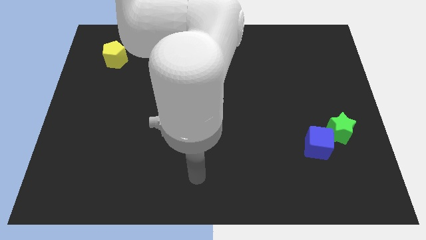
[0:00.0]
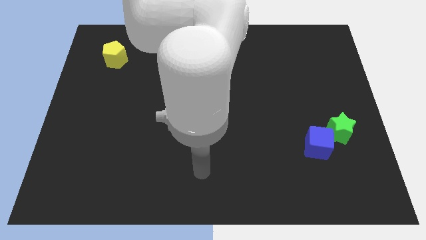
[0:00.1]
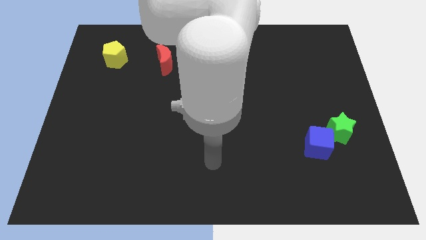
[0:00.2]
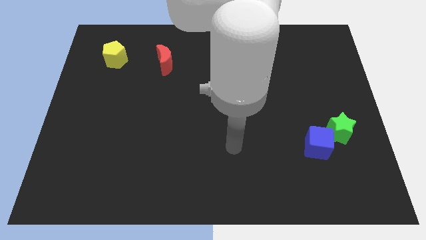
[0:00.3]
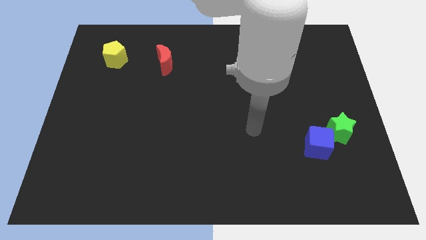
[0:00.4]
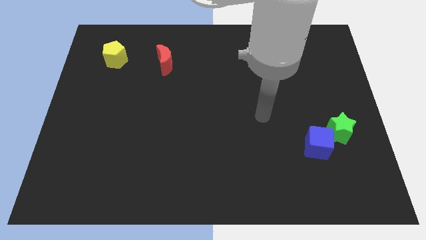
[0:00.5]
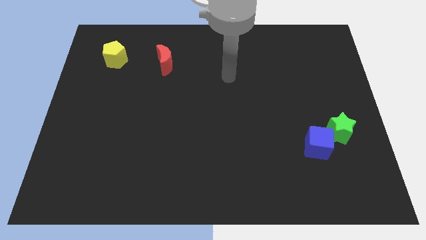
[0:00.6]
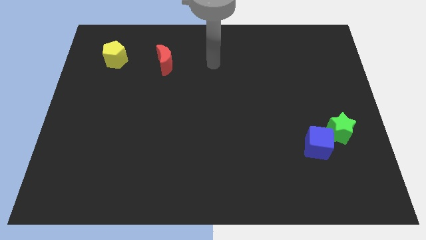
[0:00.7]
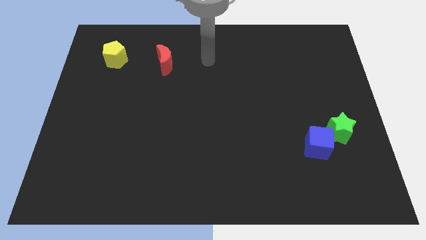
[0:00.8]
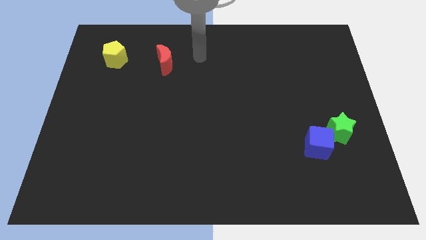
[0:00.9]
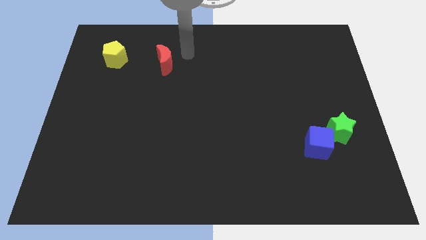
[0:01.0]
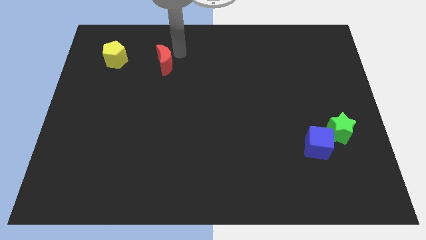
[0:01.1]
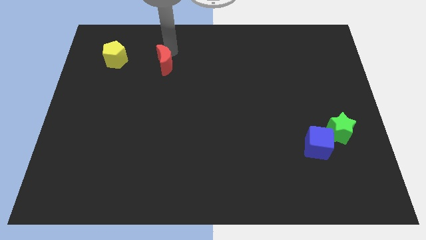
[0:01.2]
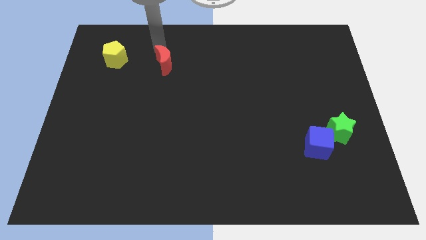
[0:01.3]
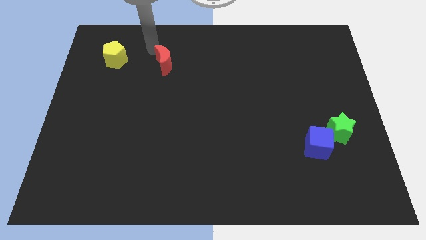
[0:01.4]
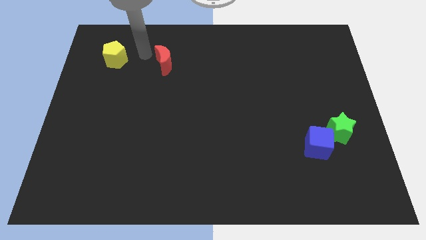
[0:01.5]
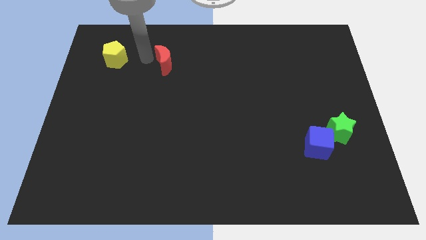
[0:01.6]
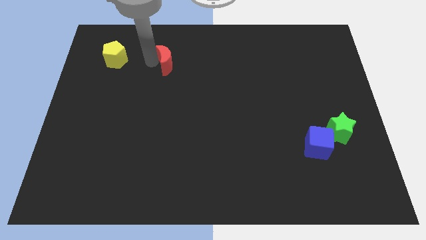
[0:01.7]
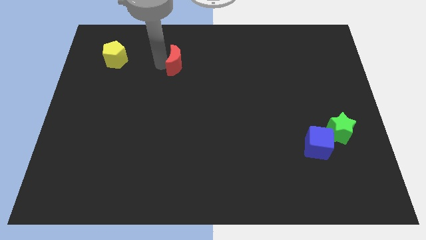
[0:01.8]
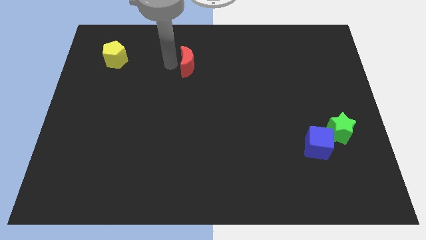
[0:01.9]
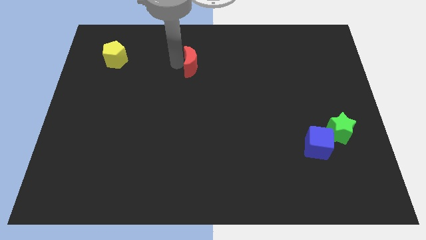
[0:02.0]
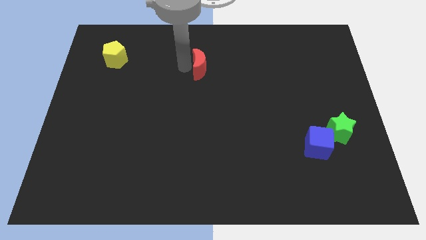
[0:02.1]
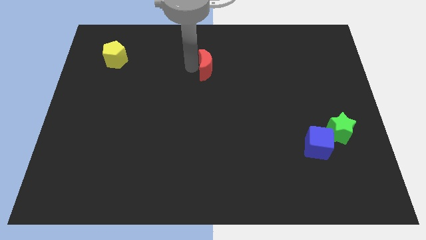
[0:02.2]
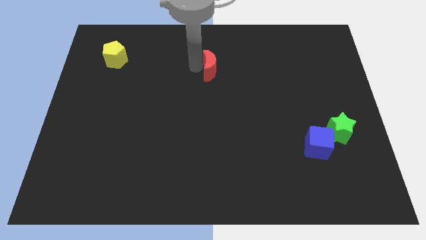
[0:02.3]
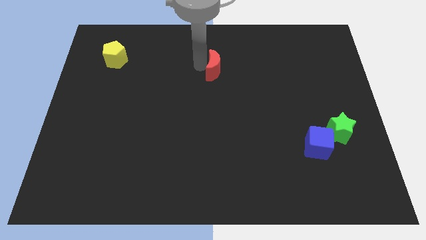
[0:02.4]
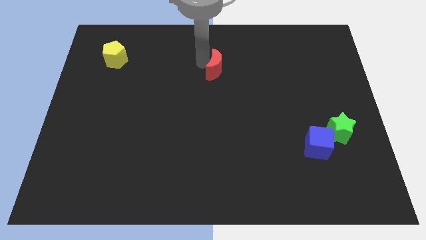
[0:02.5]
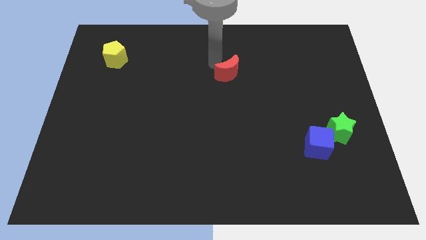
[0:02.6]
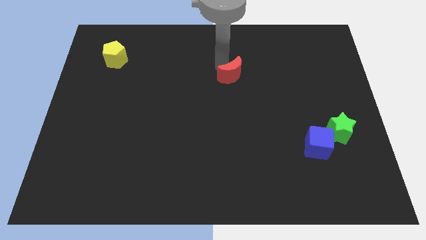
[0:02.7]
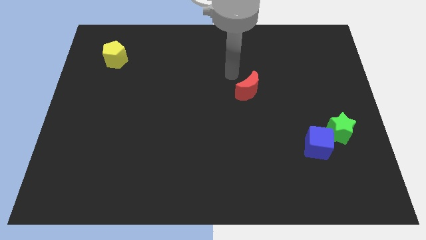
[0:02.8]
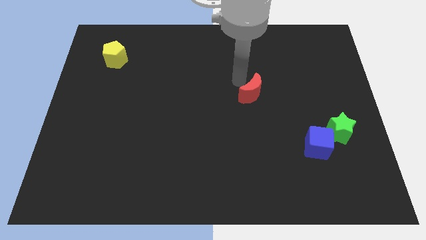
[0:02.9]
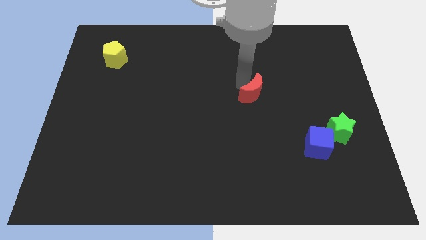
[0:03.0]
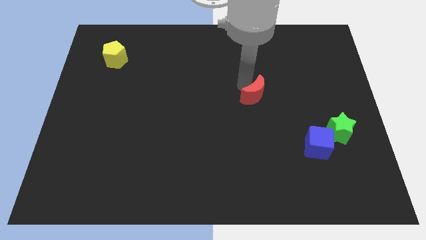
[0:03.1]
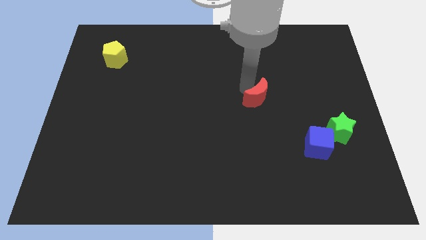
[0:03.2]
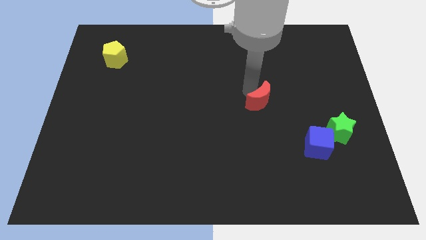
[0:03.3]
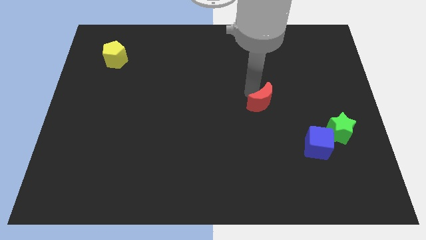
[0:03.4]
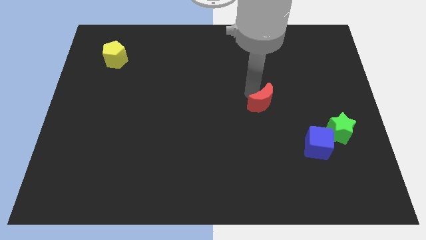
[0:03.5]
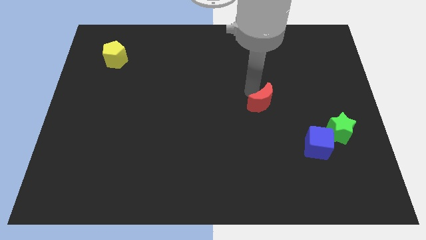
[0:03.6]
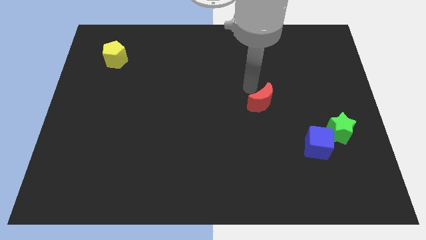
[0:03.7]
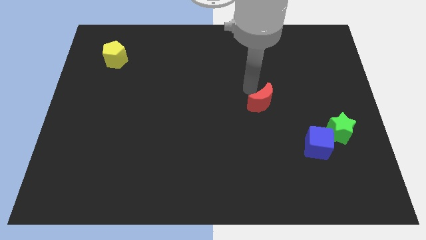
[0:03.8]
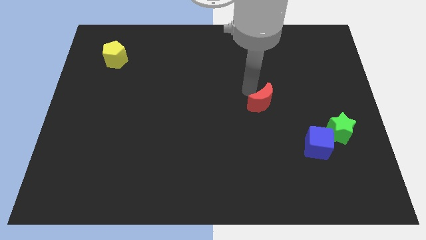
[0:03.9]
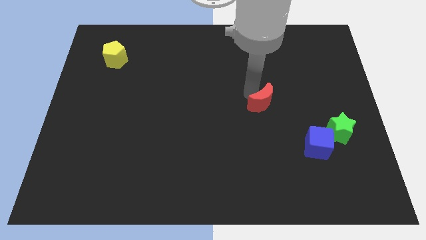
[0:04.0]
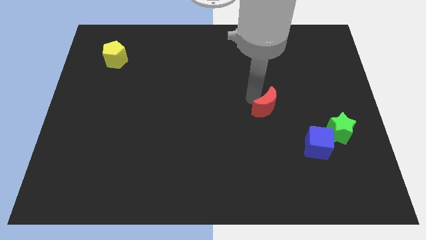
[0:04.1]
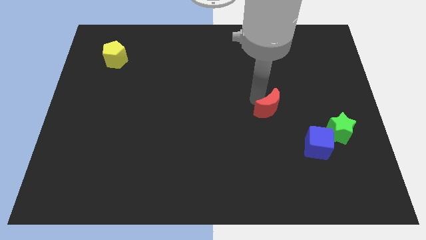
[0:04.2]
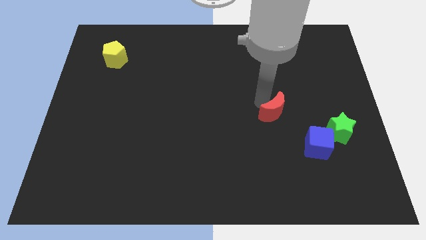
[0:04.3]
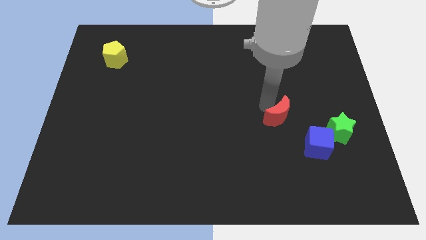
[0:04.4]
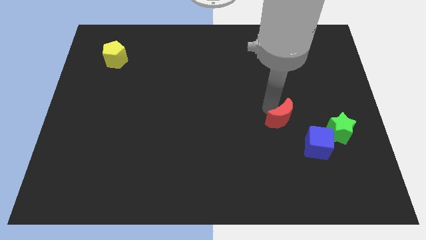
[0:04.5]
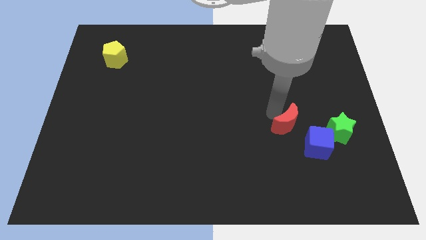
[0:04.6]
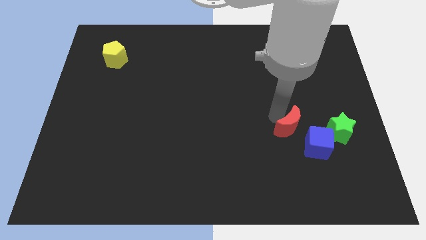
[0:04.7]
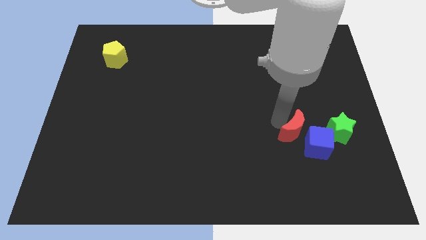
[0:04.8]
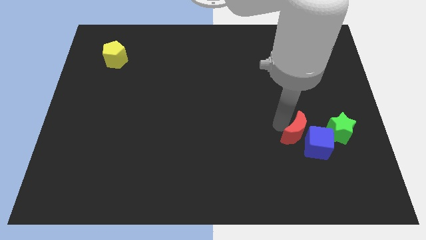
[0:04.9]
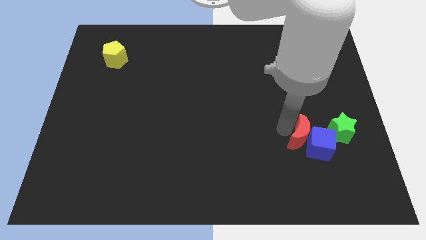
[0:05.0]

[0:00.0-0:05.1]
put the red block next to the cube

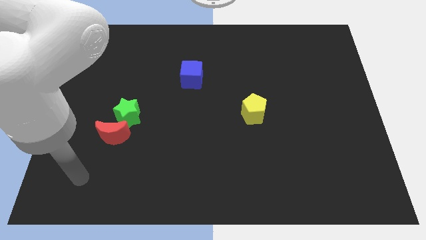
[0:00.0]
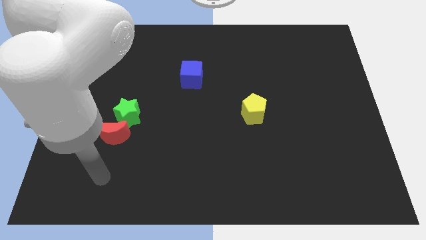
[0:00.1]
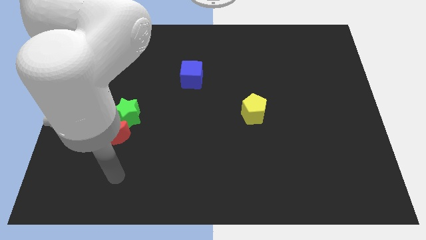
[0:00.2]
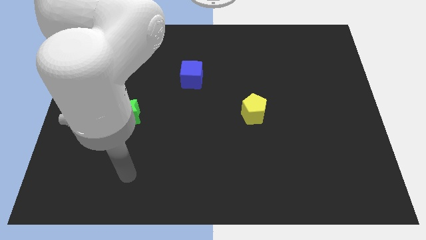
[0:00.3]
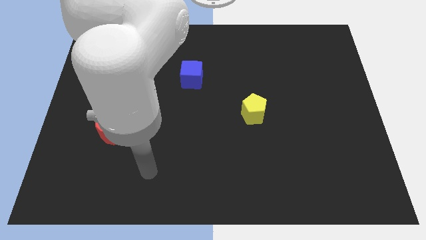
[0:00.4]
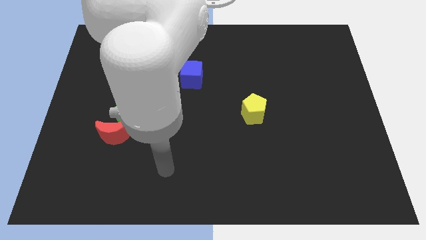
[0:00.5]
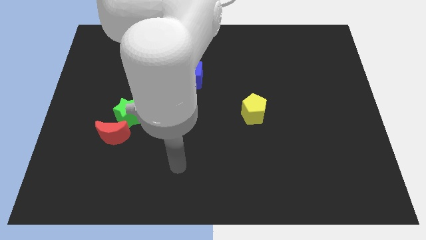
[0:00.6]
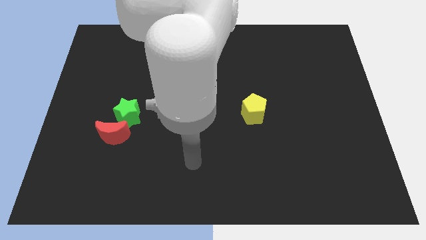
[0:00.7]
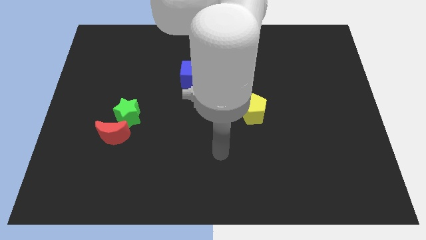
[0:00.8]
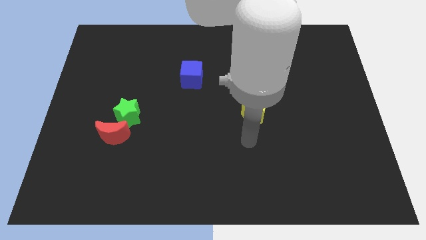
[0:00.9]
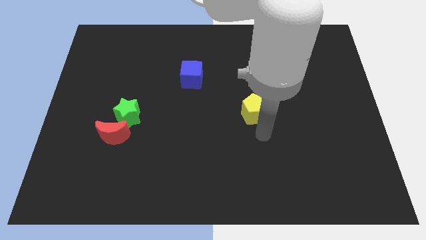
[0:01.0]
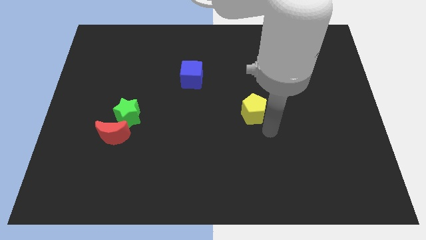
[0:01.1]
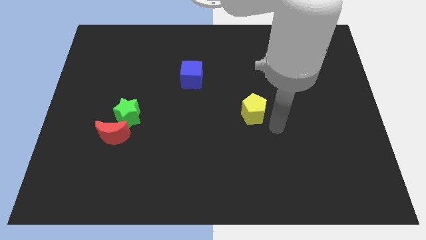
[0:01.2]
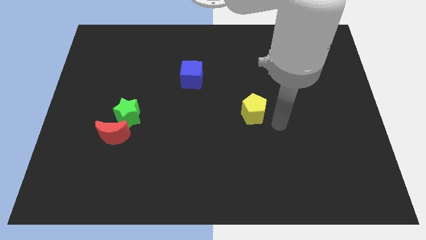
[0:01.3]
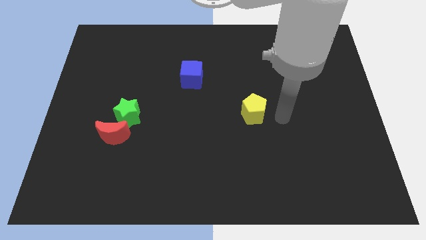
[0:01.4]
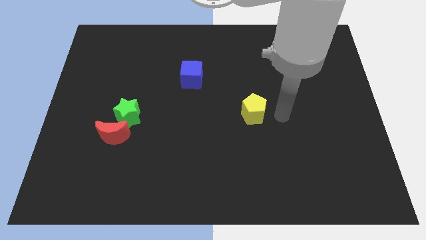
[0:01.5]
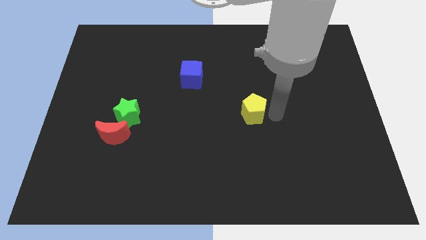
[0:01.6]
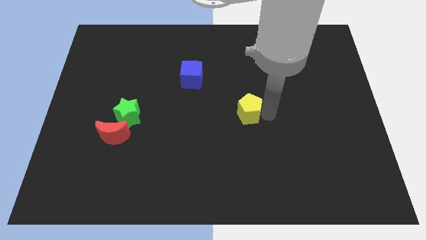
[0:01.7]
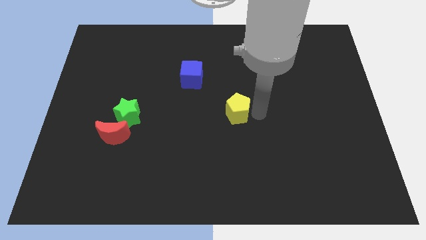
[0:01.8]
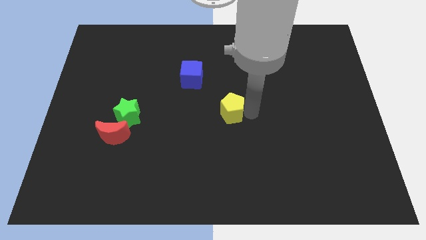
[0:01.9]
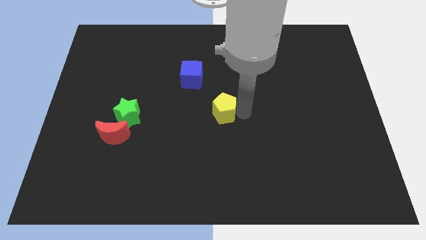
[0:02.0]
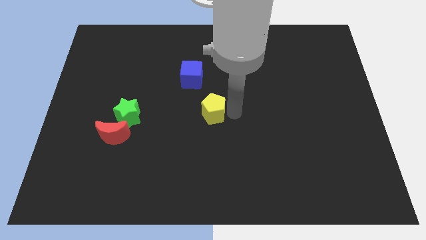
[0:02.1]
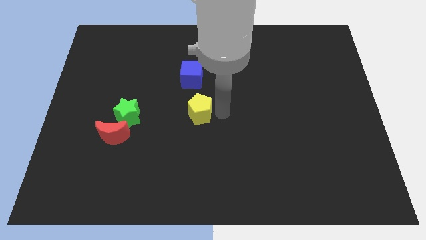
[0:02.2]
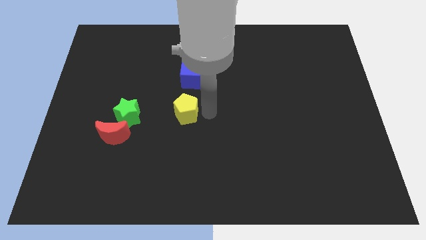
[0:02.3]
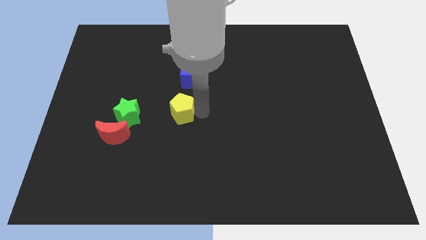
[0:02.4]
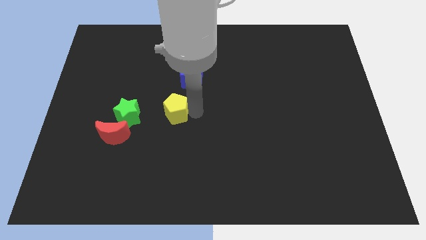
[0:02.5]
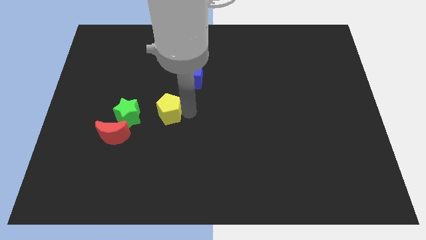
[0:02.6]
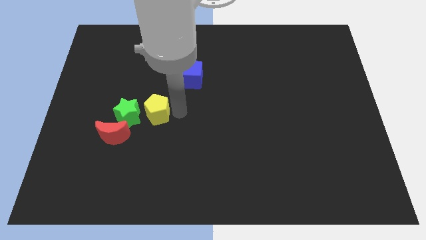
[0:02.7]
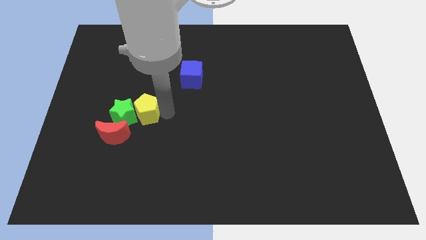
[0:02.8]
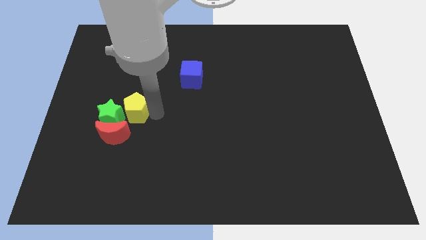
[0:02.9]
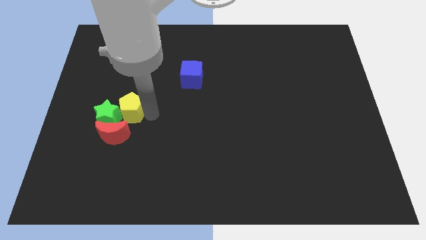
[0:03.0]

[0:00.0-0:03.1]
move the yellow block close to the green block
